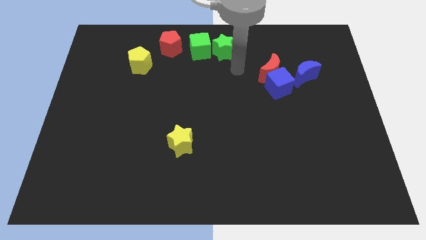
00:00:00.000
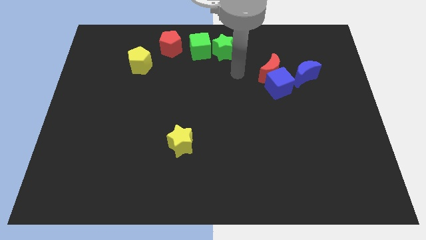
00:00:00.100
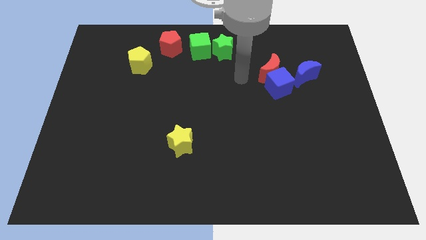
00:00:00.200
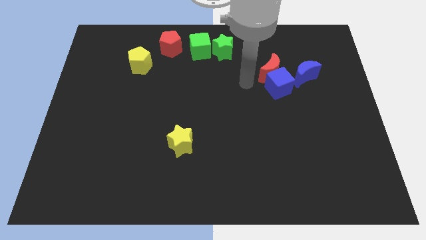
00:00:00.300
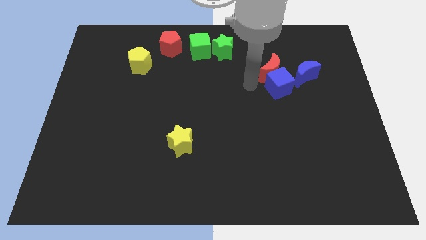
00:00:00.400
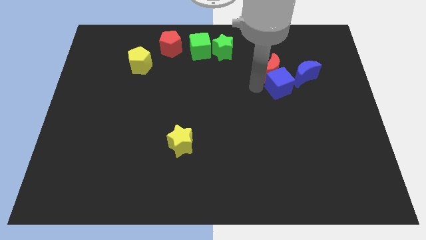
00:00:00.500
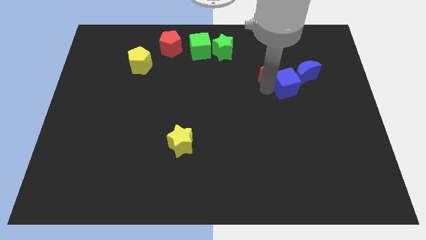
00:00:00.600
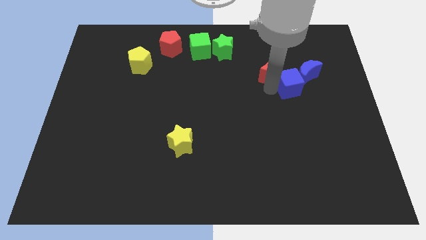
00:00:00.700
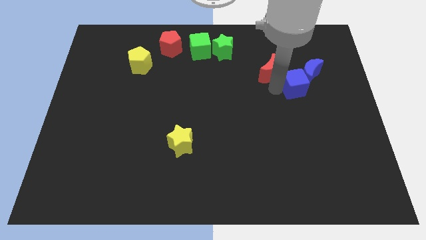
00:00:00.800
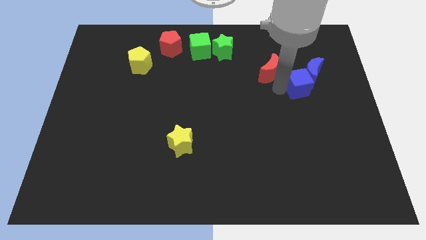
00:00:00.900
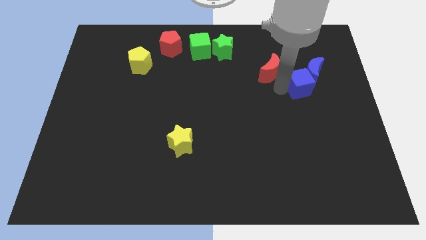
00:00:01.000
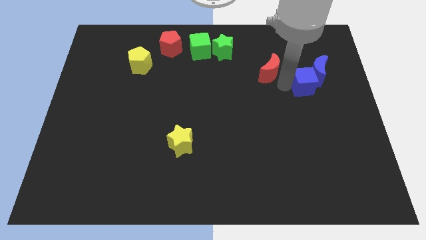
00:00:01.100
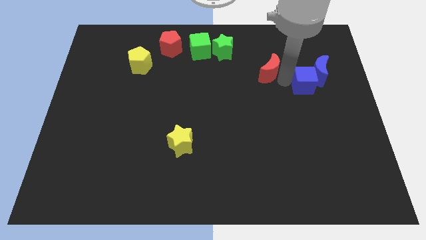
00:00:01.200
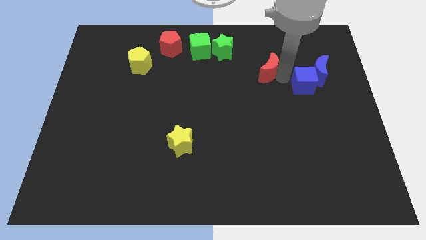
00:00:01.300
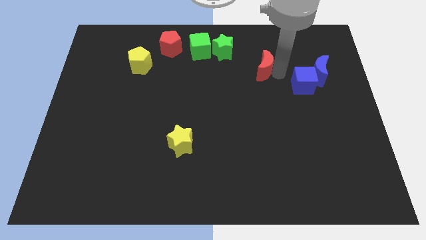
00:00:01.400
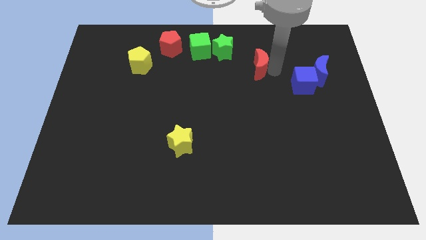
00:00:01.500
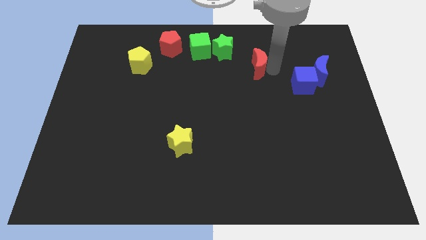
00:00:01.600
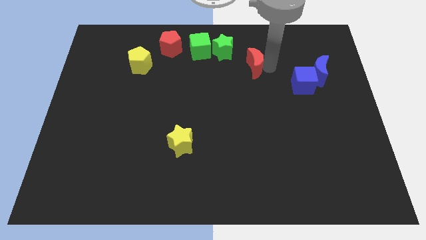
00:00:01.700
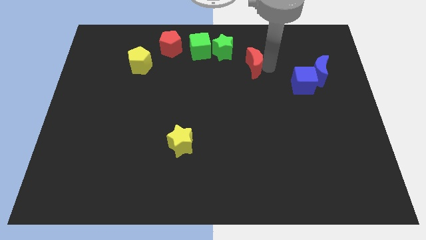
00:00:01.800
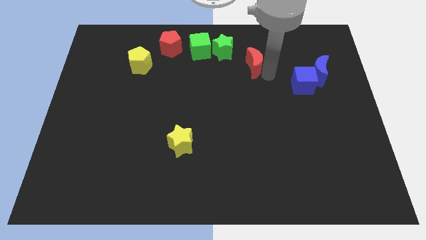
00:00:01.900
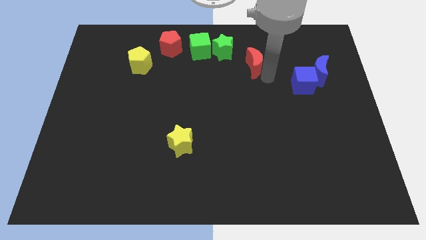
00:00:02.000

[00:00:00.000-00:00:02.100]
move the red moon away from blue blocks

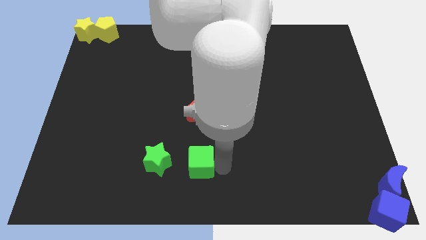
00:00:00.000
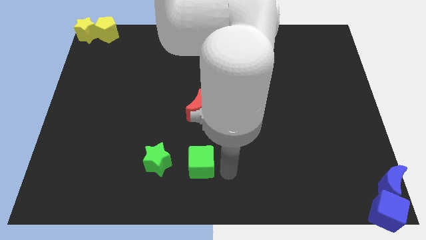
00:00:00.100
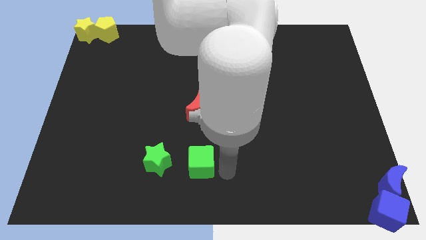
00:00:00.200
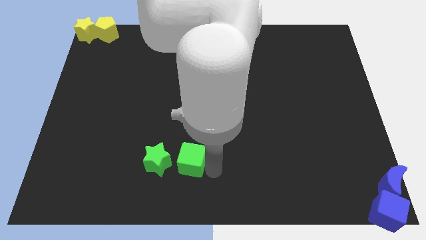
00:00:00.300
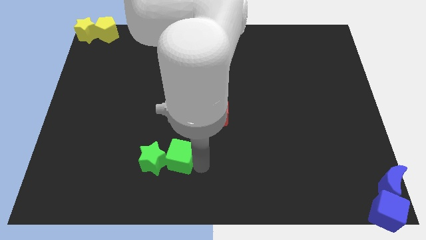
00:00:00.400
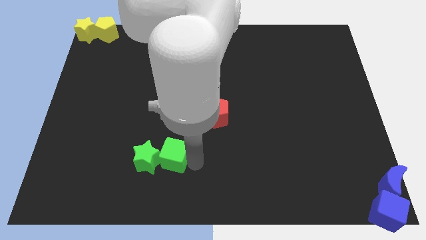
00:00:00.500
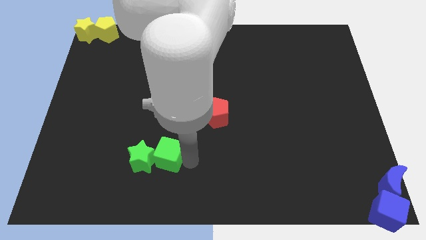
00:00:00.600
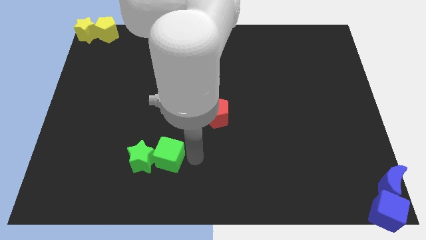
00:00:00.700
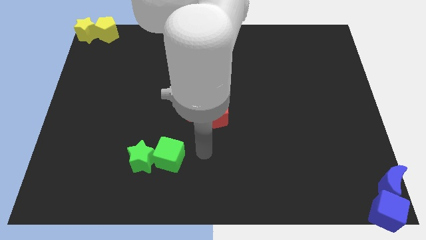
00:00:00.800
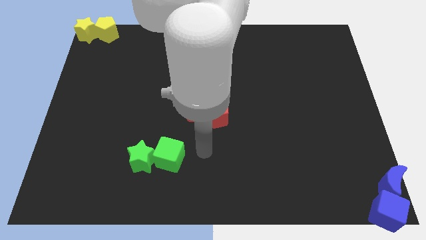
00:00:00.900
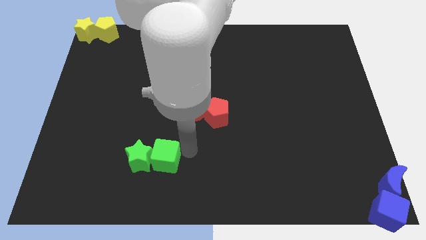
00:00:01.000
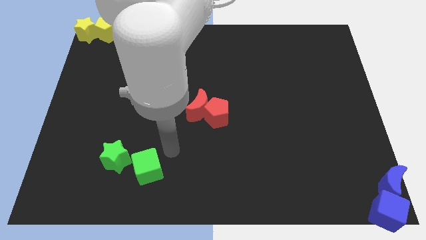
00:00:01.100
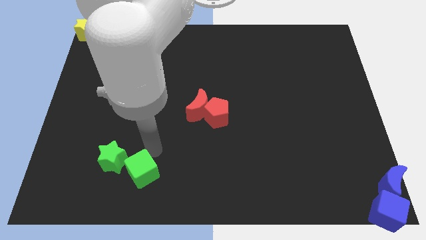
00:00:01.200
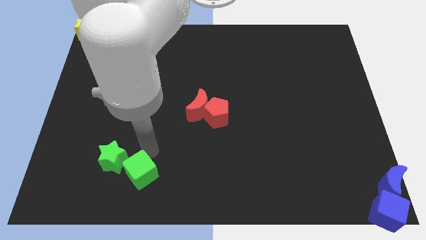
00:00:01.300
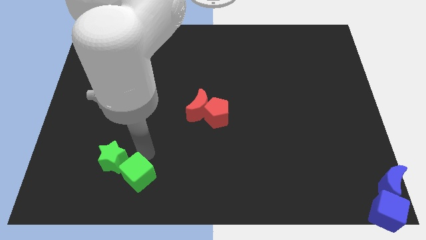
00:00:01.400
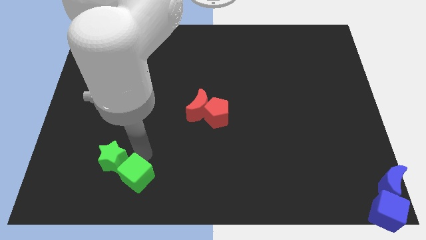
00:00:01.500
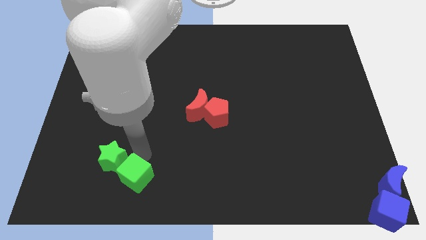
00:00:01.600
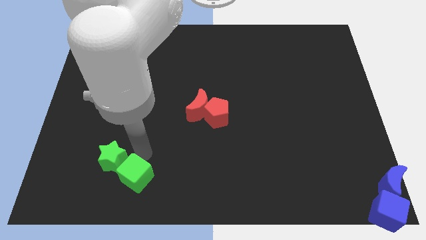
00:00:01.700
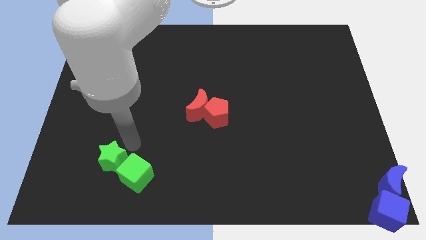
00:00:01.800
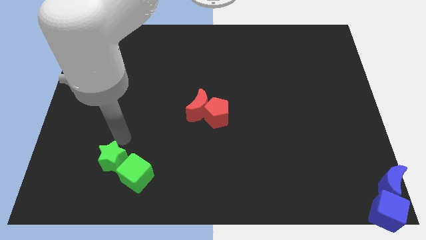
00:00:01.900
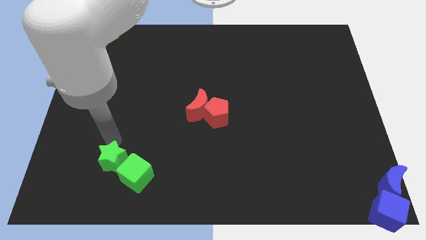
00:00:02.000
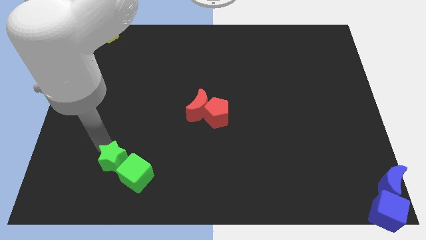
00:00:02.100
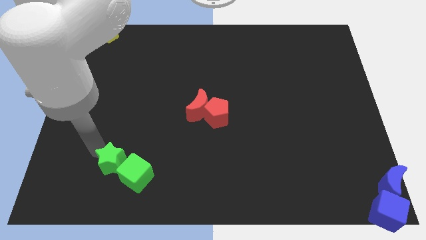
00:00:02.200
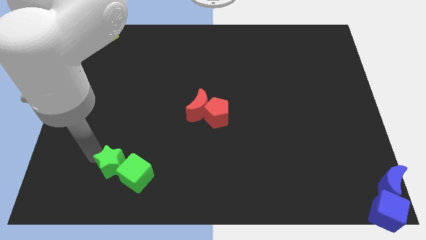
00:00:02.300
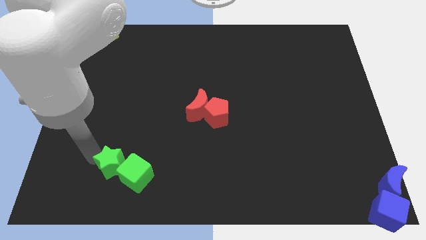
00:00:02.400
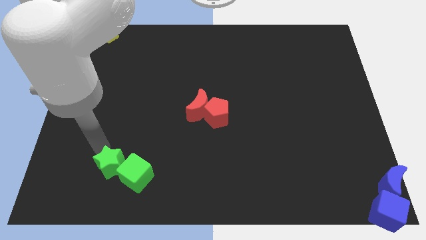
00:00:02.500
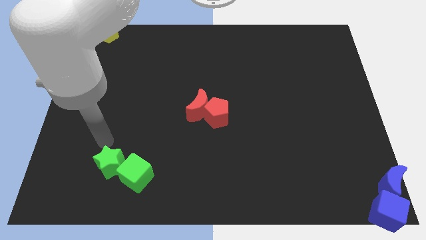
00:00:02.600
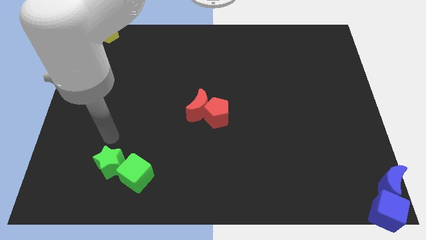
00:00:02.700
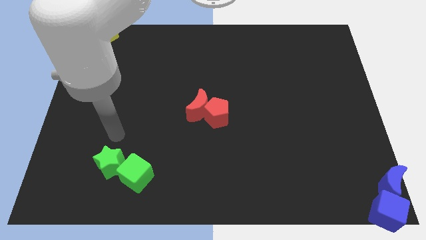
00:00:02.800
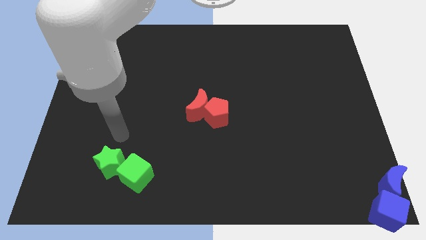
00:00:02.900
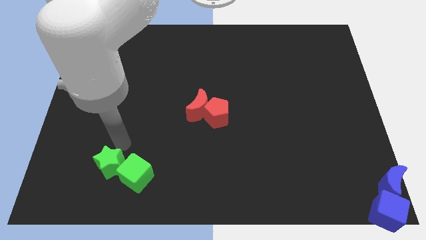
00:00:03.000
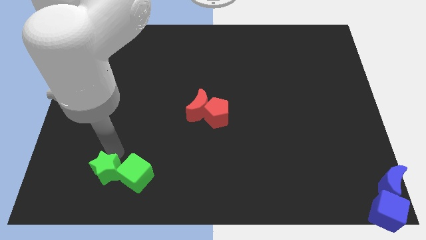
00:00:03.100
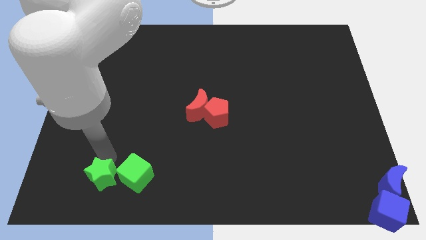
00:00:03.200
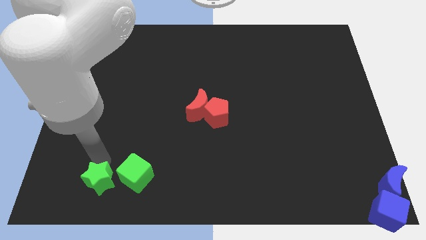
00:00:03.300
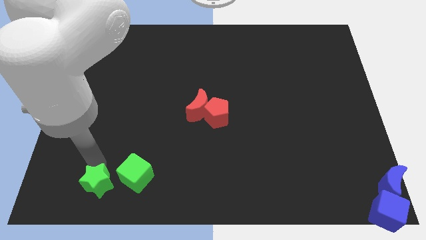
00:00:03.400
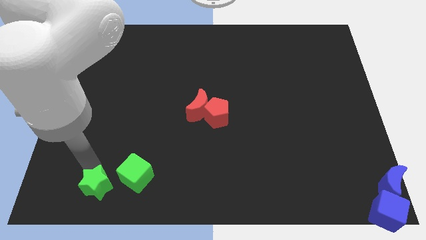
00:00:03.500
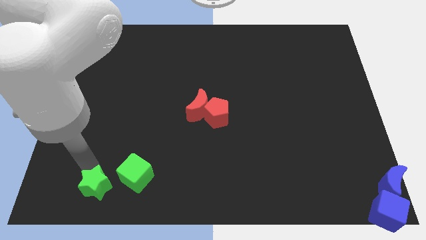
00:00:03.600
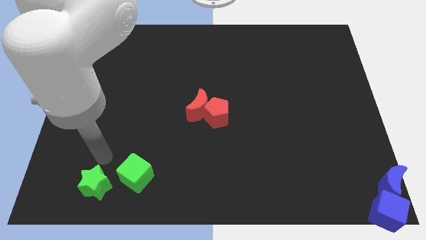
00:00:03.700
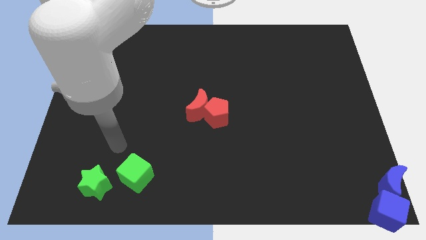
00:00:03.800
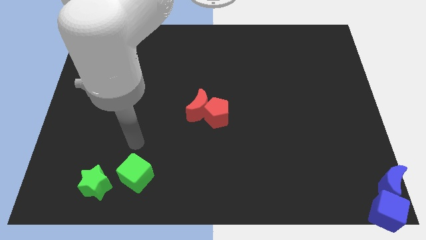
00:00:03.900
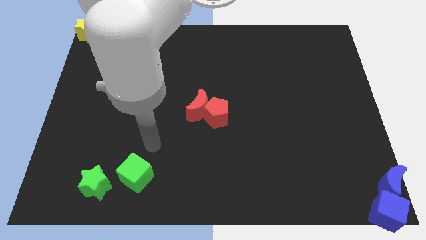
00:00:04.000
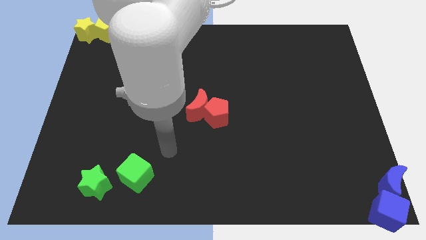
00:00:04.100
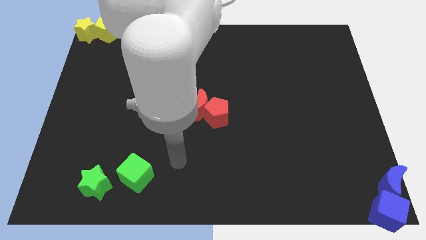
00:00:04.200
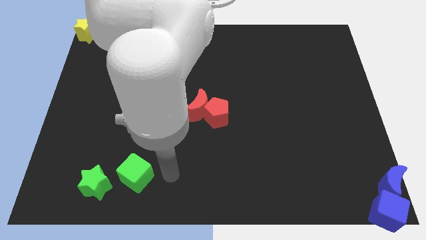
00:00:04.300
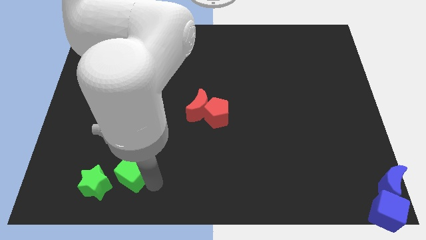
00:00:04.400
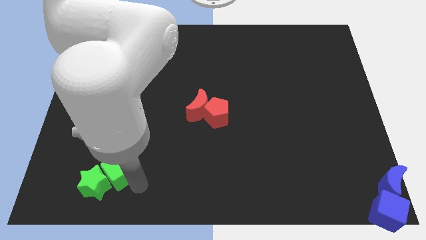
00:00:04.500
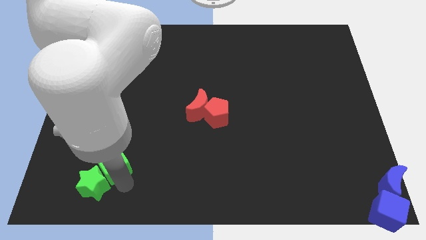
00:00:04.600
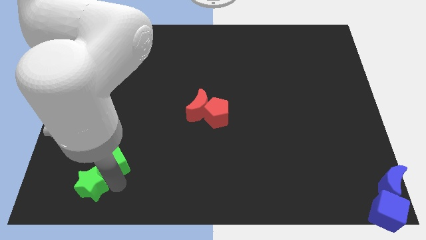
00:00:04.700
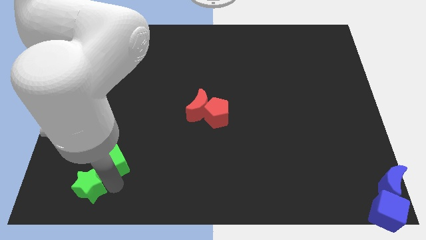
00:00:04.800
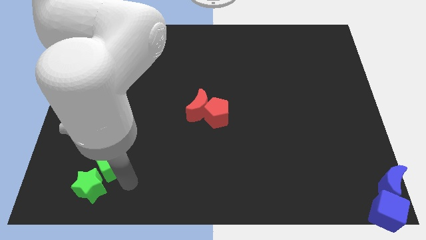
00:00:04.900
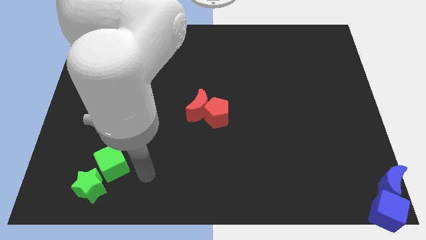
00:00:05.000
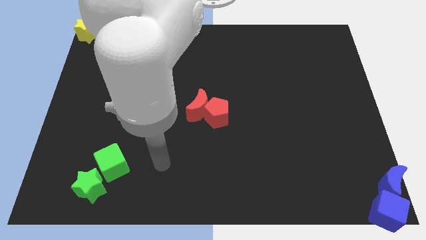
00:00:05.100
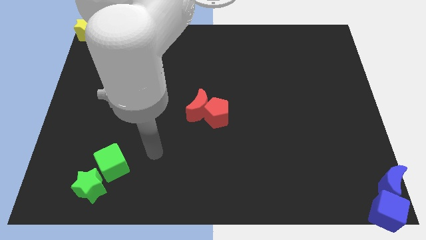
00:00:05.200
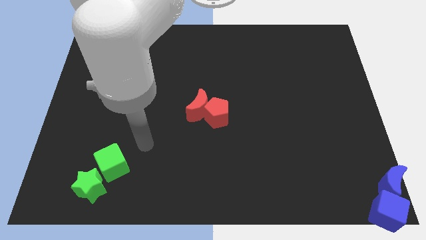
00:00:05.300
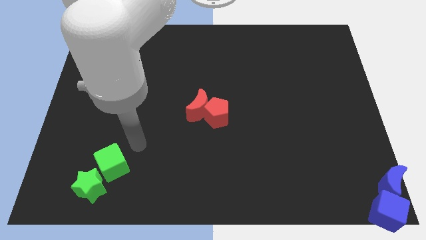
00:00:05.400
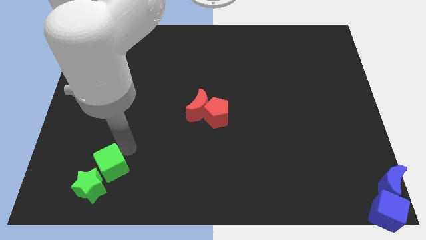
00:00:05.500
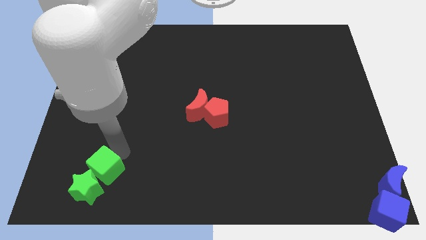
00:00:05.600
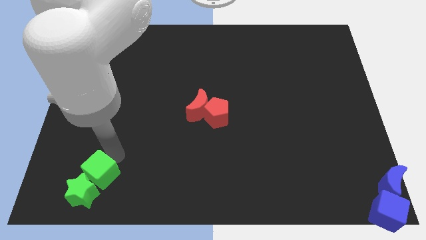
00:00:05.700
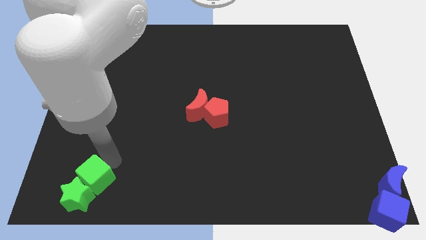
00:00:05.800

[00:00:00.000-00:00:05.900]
move the green star and green cube towards the bottom left of the board

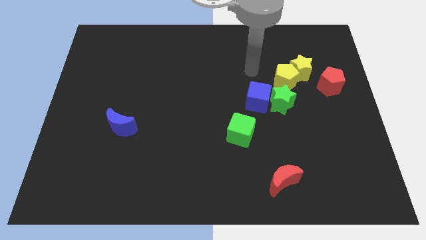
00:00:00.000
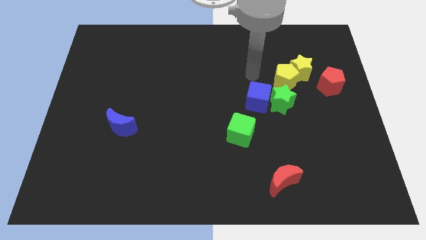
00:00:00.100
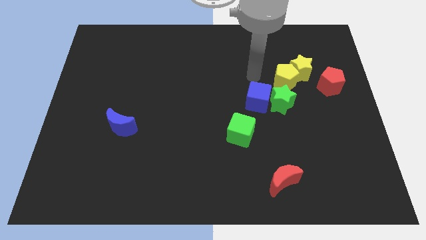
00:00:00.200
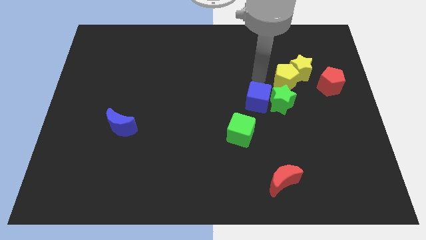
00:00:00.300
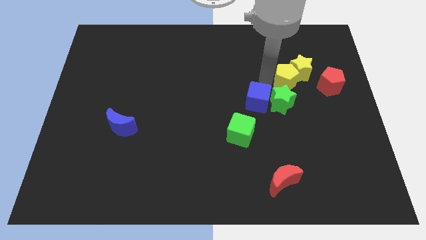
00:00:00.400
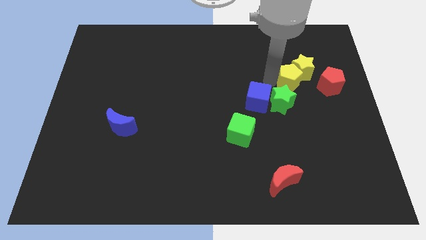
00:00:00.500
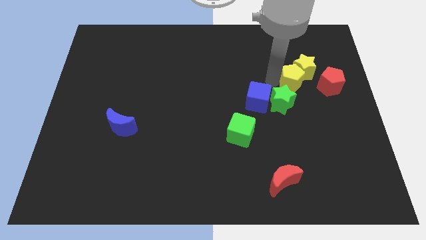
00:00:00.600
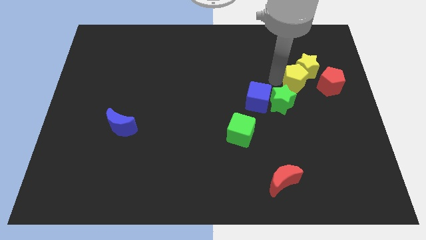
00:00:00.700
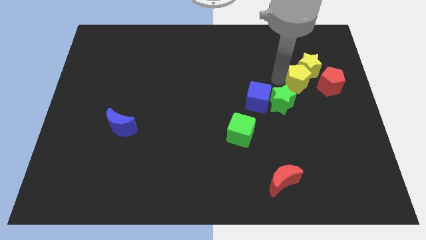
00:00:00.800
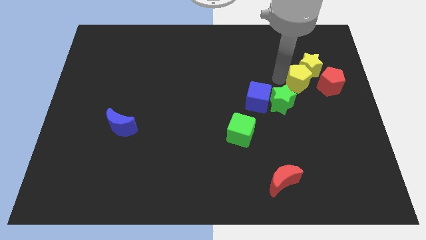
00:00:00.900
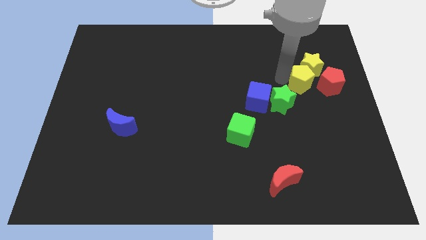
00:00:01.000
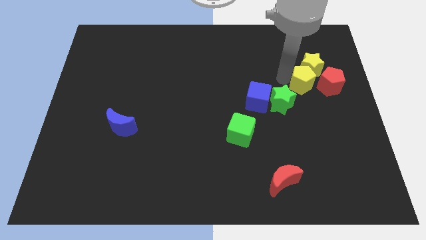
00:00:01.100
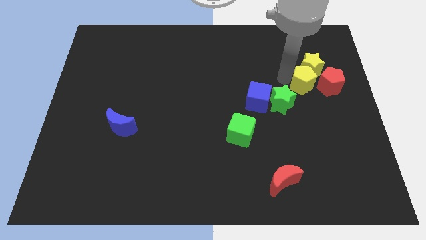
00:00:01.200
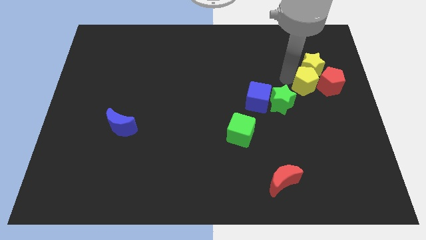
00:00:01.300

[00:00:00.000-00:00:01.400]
slightly move the yellow pentagon towards left side of the red pentagon
